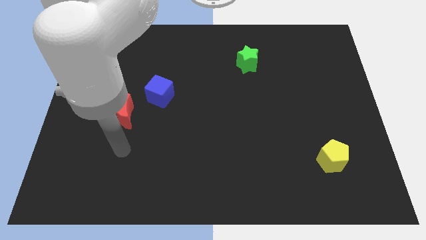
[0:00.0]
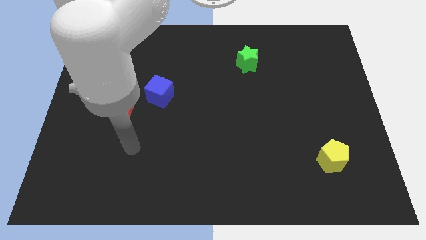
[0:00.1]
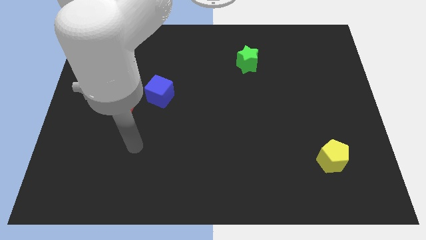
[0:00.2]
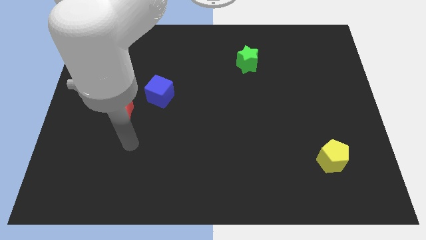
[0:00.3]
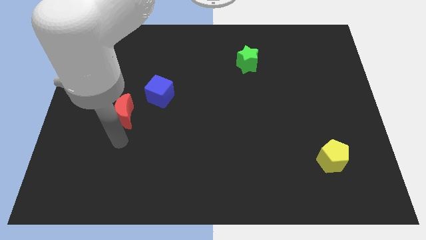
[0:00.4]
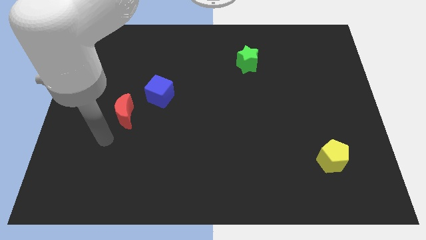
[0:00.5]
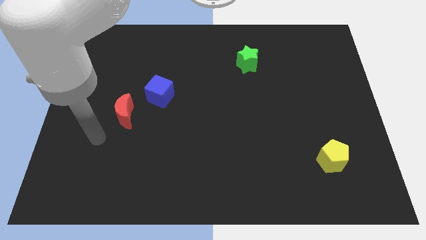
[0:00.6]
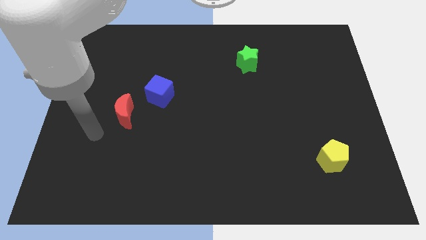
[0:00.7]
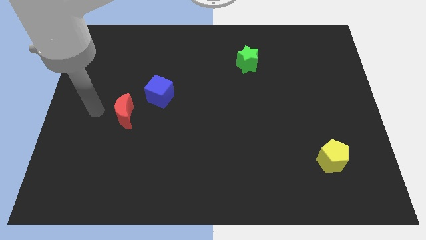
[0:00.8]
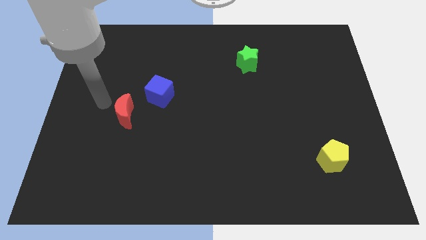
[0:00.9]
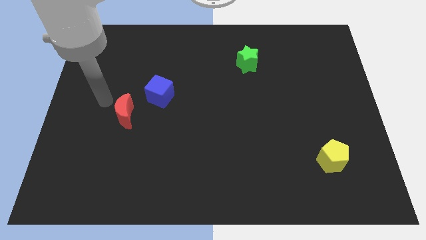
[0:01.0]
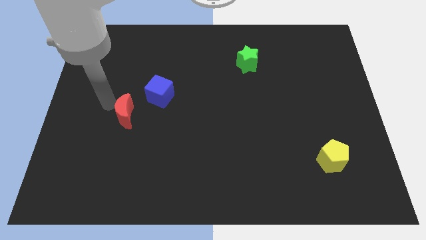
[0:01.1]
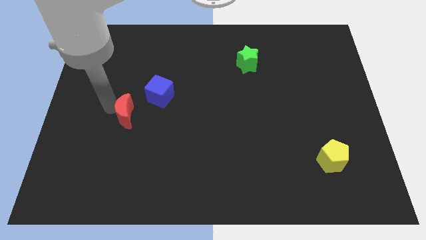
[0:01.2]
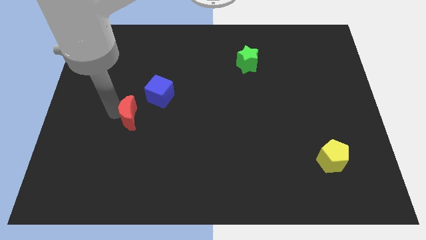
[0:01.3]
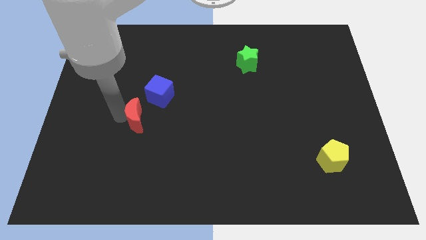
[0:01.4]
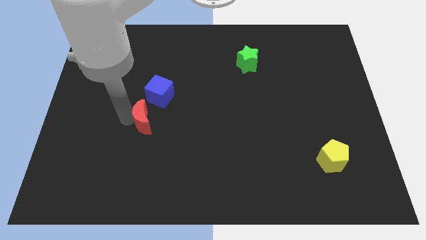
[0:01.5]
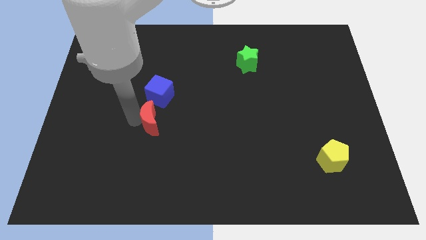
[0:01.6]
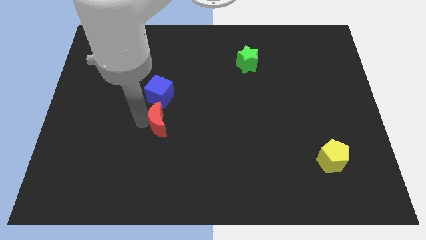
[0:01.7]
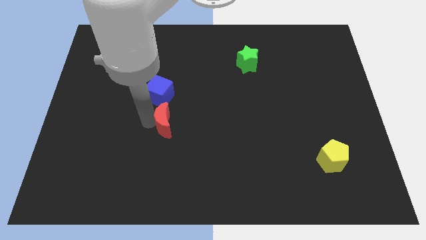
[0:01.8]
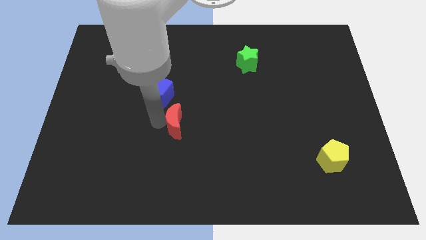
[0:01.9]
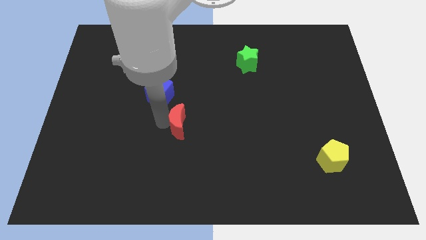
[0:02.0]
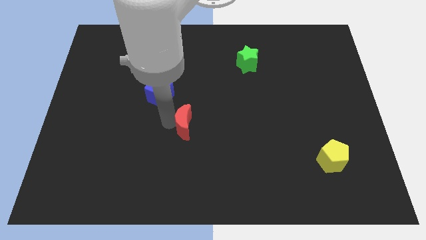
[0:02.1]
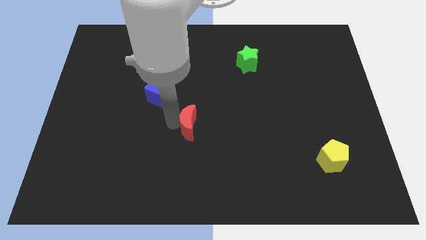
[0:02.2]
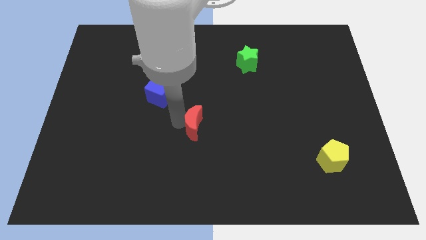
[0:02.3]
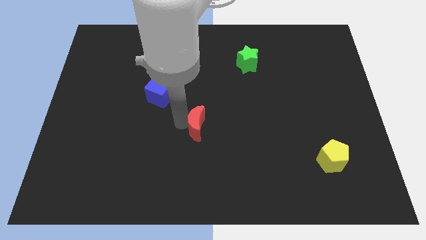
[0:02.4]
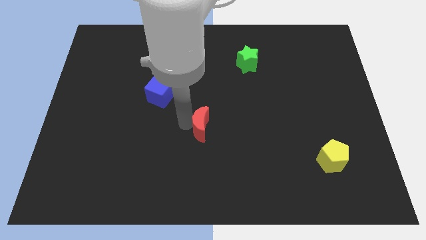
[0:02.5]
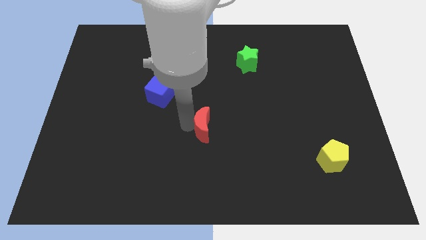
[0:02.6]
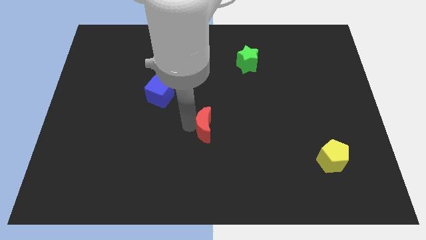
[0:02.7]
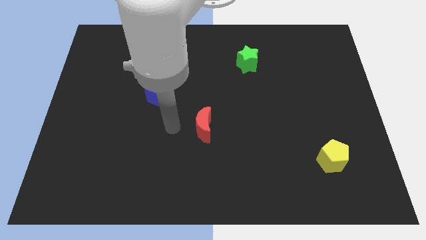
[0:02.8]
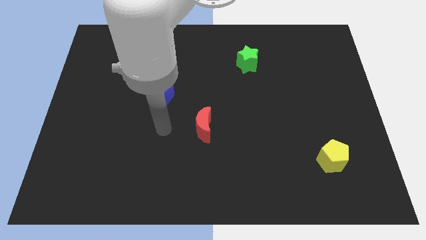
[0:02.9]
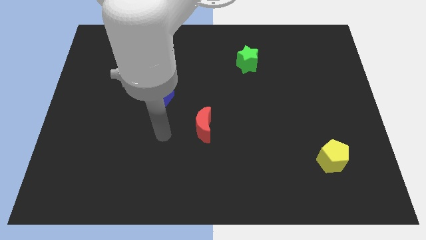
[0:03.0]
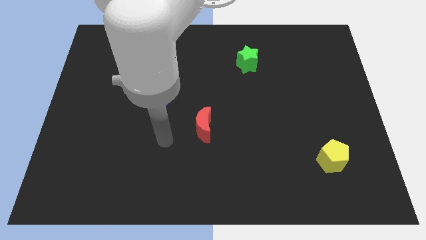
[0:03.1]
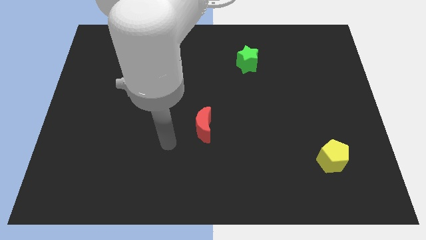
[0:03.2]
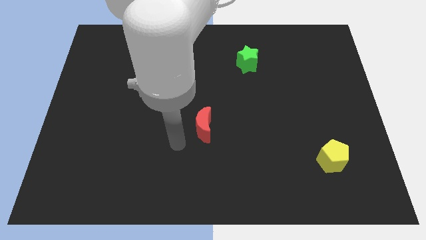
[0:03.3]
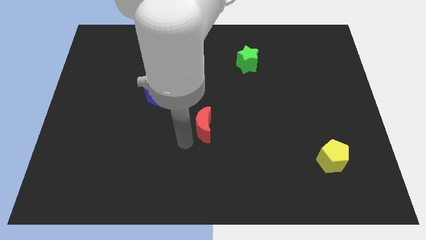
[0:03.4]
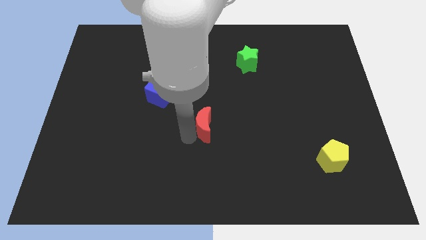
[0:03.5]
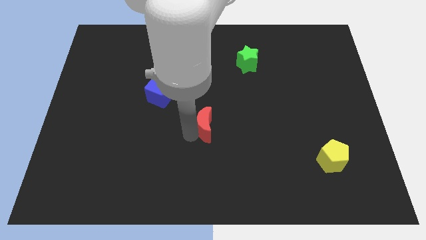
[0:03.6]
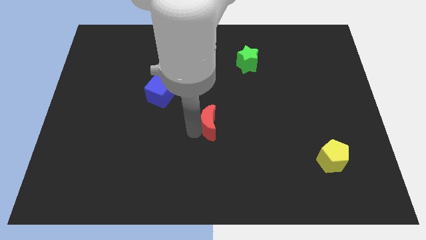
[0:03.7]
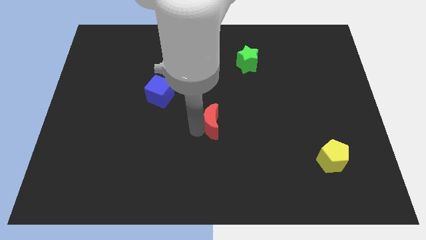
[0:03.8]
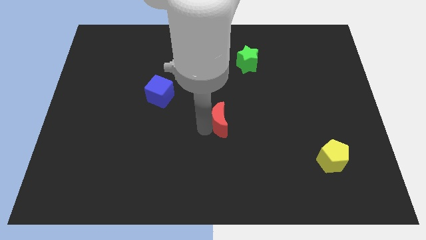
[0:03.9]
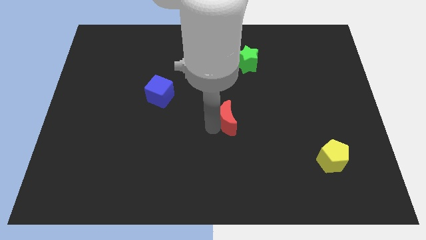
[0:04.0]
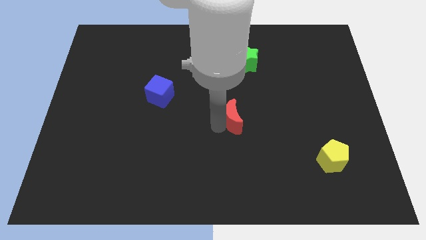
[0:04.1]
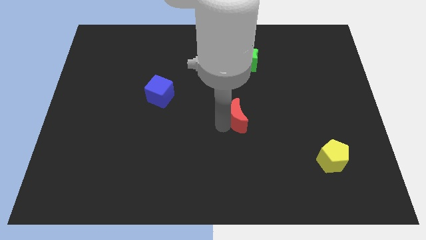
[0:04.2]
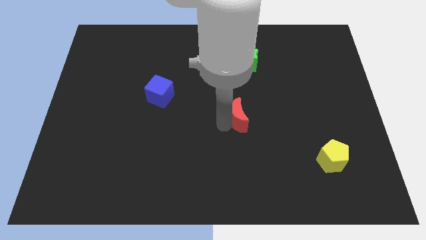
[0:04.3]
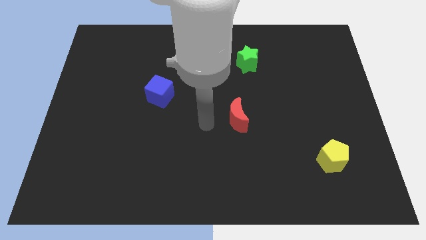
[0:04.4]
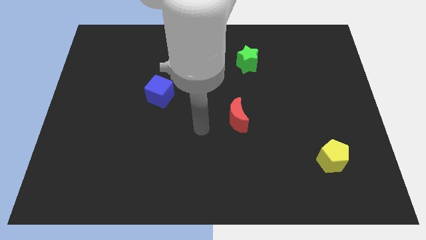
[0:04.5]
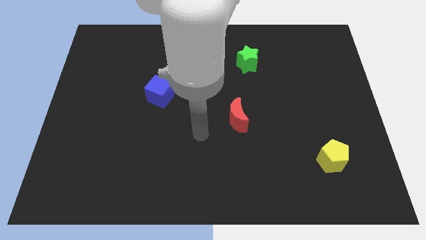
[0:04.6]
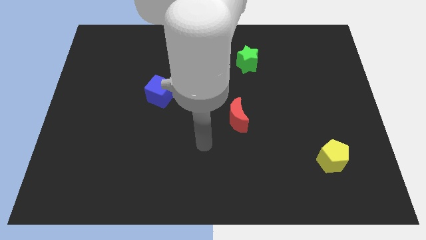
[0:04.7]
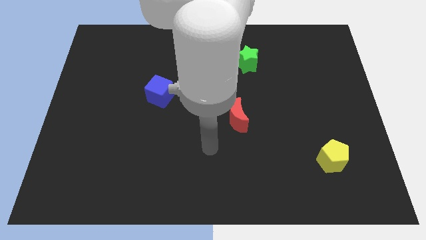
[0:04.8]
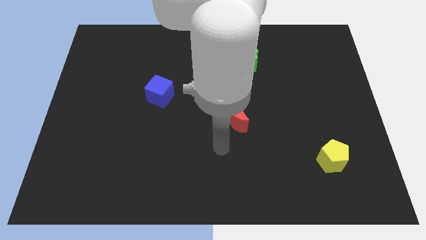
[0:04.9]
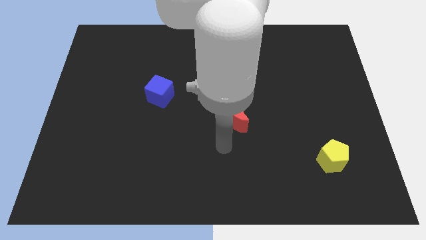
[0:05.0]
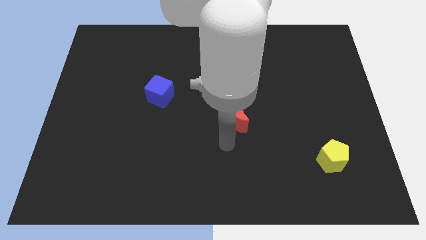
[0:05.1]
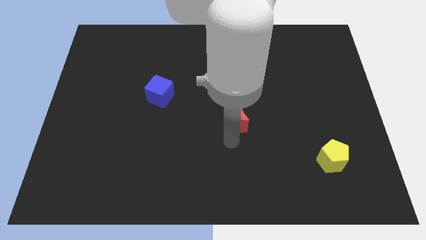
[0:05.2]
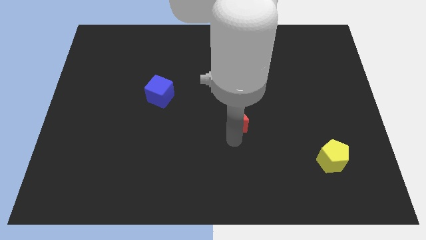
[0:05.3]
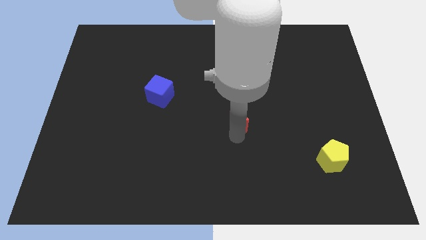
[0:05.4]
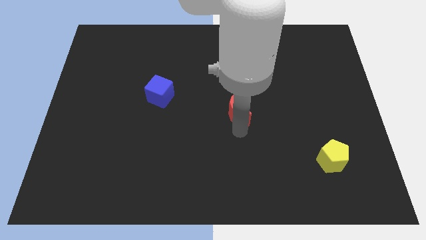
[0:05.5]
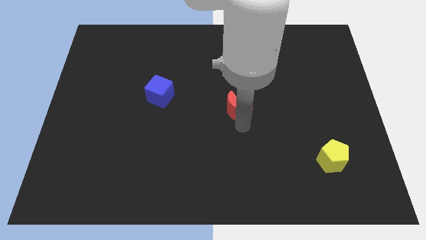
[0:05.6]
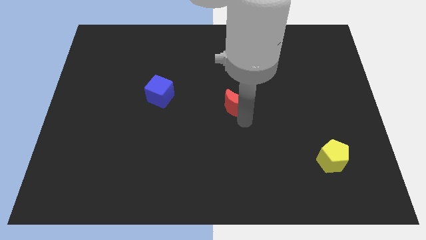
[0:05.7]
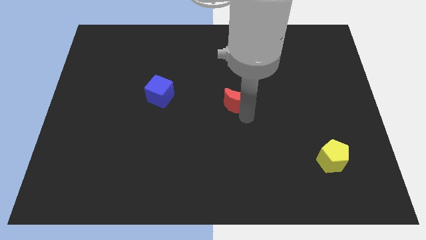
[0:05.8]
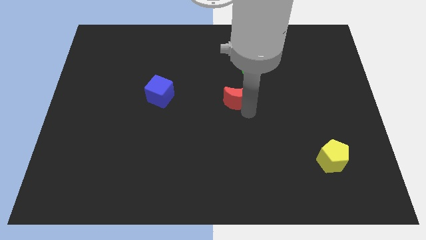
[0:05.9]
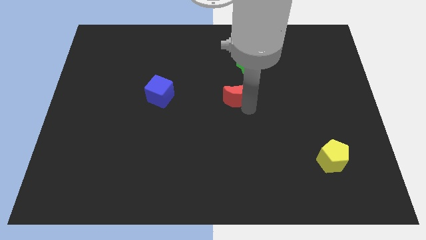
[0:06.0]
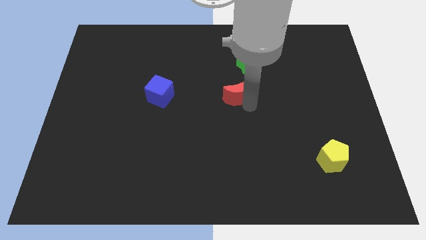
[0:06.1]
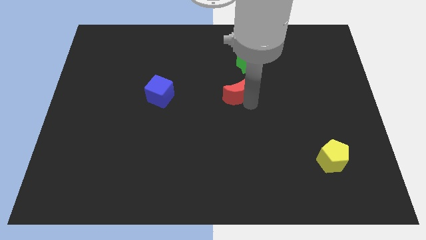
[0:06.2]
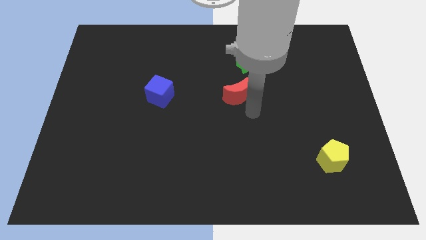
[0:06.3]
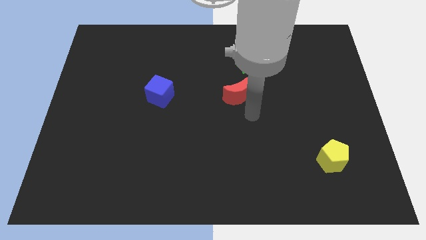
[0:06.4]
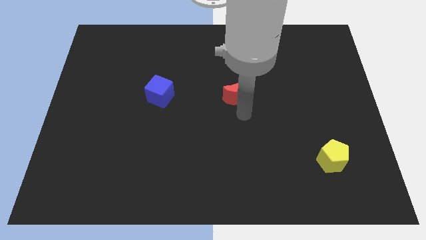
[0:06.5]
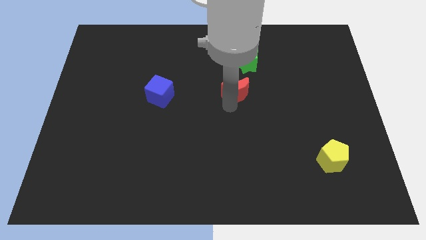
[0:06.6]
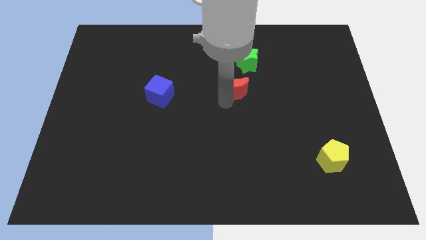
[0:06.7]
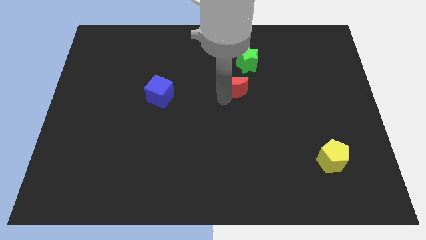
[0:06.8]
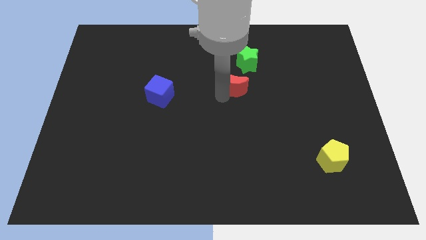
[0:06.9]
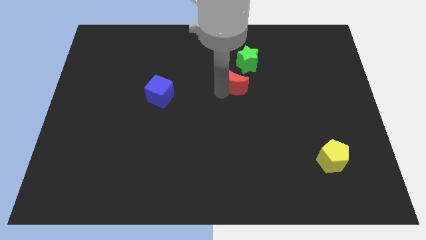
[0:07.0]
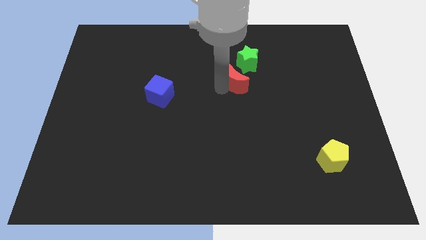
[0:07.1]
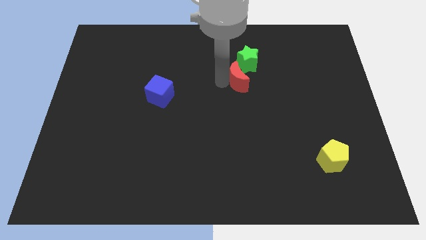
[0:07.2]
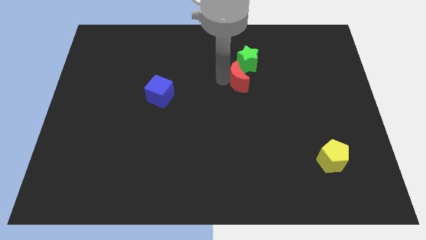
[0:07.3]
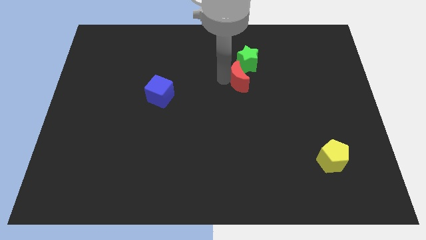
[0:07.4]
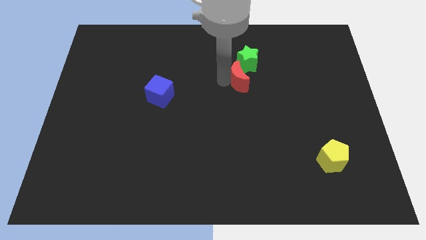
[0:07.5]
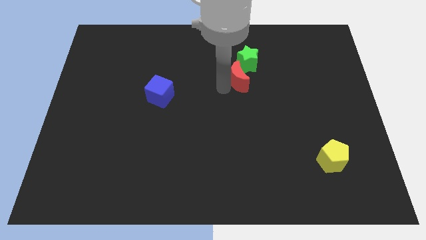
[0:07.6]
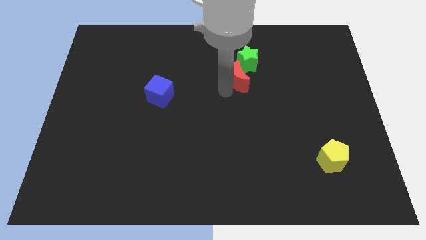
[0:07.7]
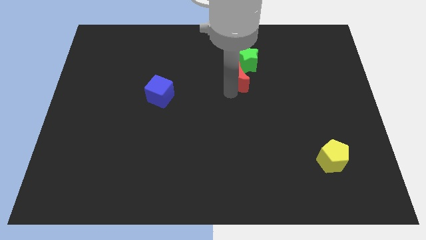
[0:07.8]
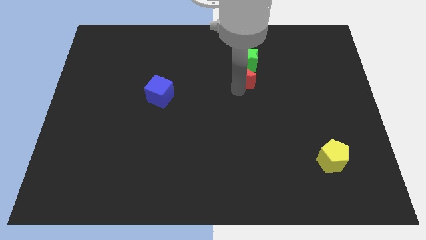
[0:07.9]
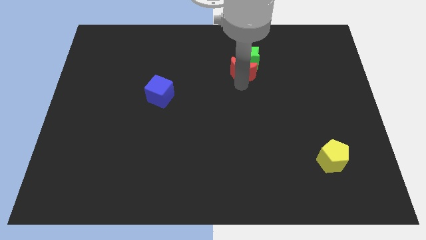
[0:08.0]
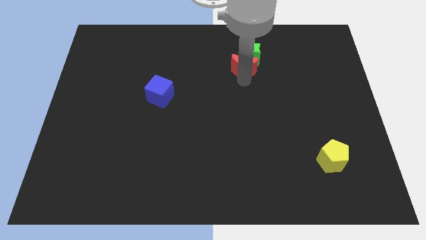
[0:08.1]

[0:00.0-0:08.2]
put the moon to the green star

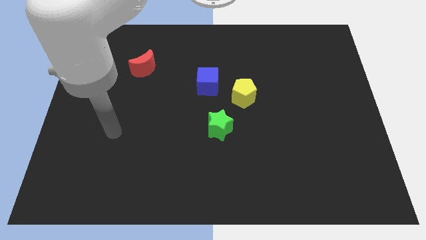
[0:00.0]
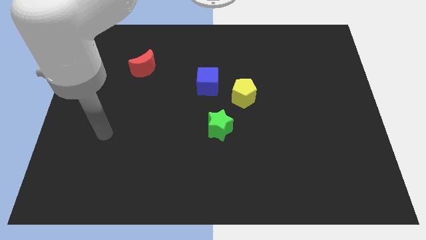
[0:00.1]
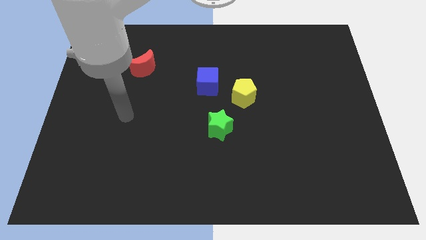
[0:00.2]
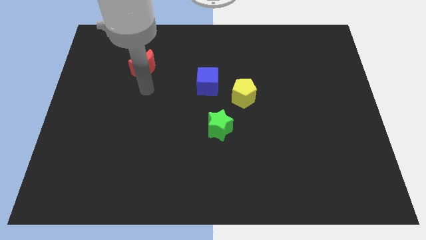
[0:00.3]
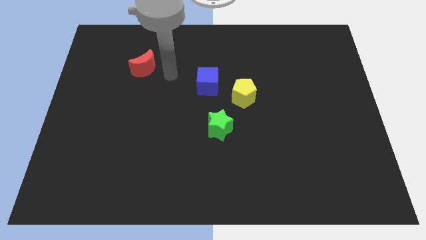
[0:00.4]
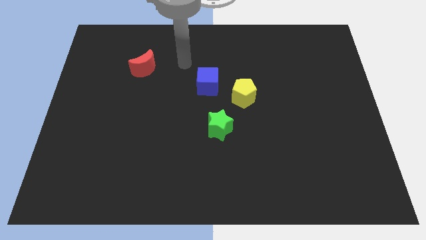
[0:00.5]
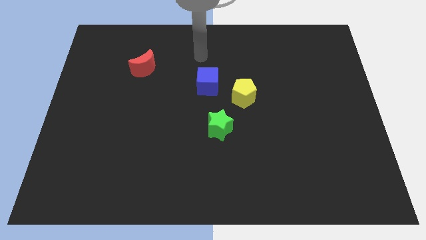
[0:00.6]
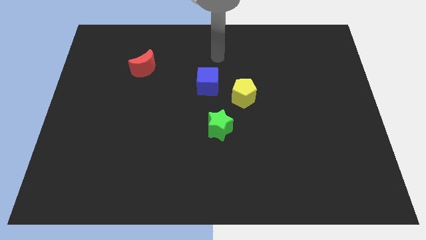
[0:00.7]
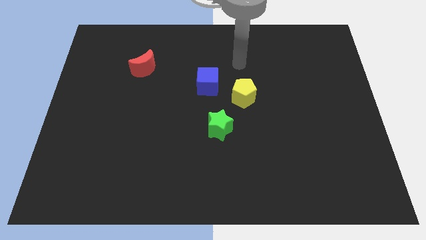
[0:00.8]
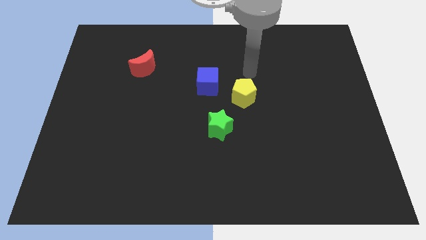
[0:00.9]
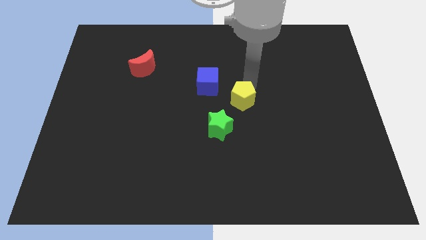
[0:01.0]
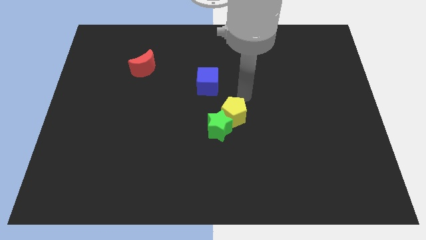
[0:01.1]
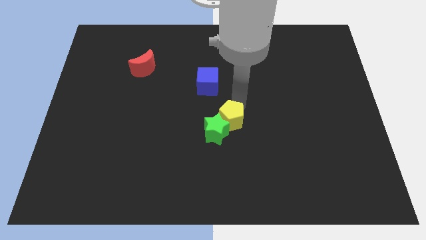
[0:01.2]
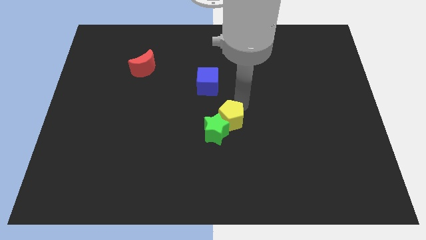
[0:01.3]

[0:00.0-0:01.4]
move the pentagon to the green star
